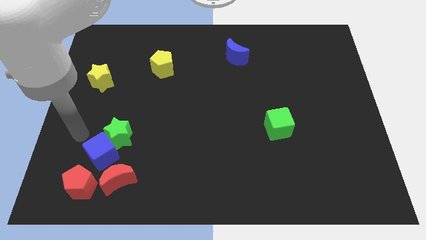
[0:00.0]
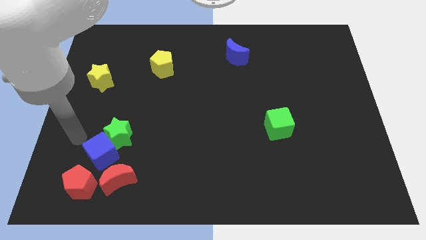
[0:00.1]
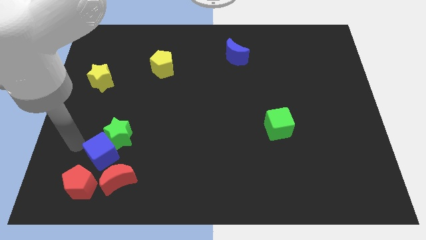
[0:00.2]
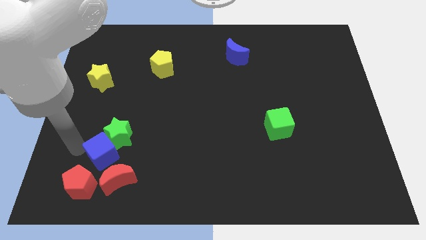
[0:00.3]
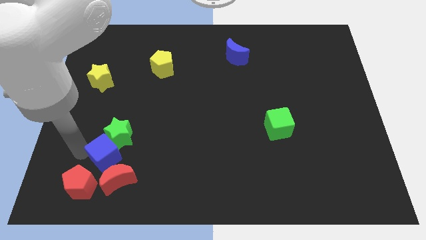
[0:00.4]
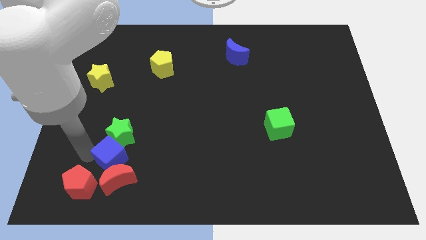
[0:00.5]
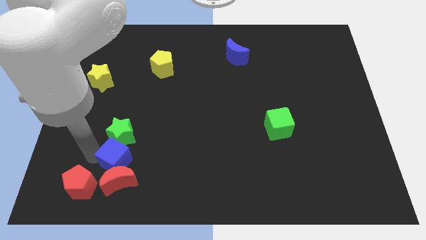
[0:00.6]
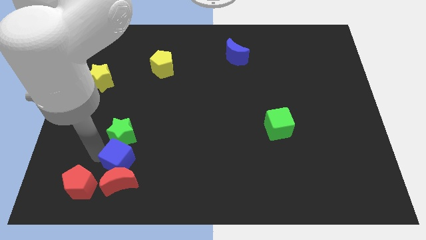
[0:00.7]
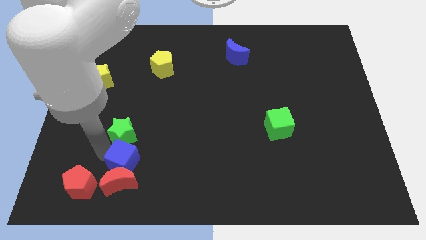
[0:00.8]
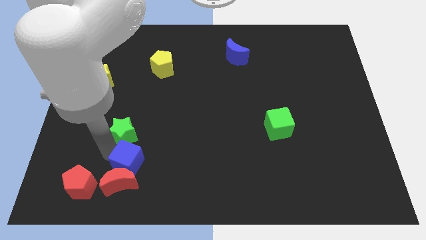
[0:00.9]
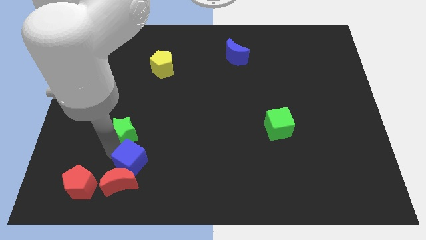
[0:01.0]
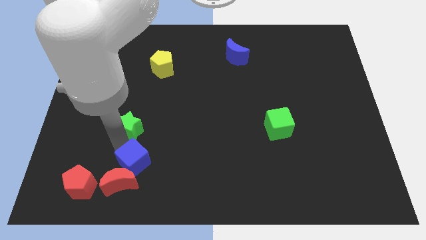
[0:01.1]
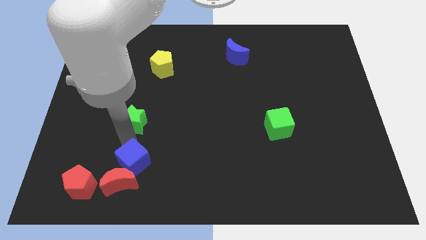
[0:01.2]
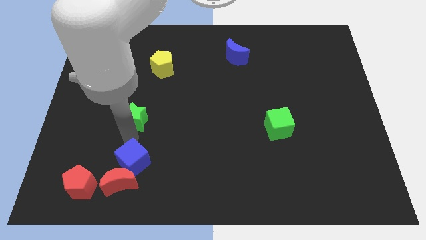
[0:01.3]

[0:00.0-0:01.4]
push the blue cube above the red crescent

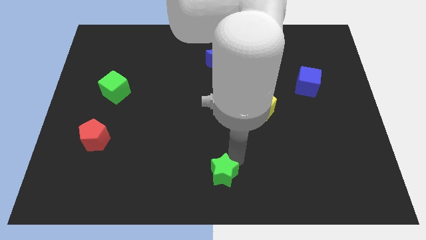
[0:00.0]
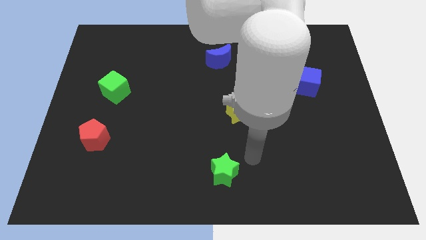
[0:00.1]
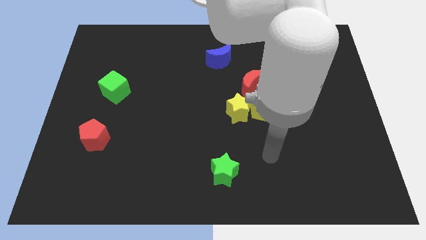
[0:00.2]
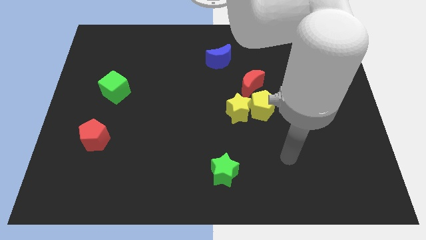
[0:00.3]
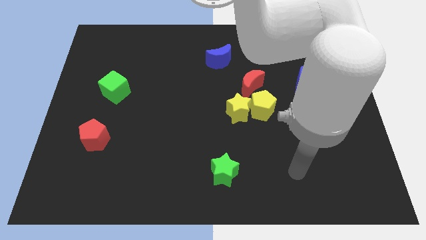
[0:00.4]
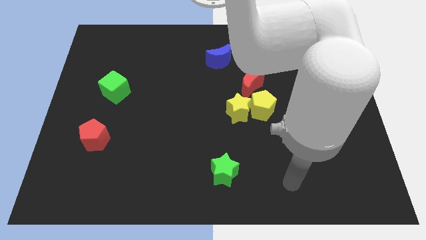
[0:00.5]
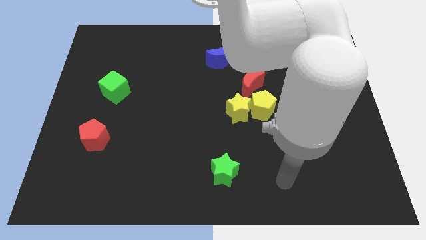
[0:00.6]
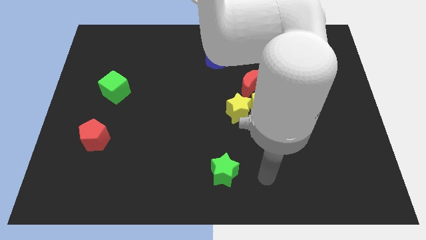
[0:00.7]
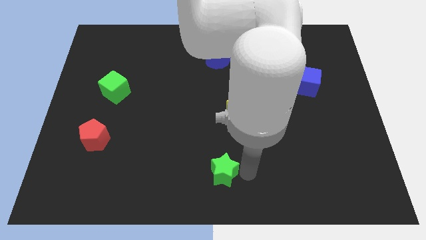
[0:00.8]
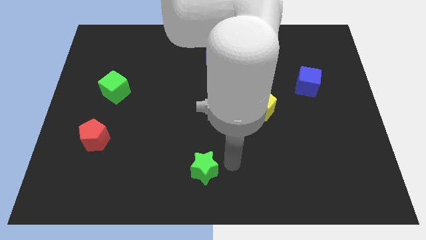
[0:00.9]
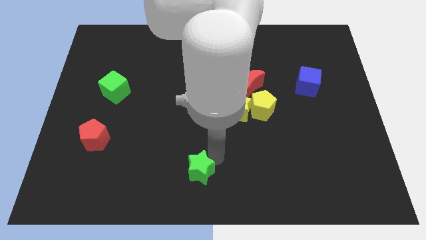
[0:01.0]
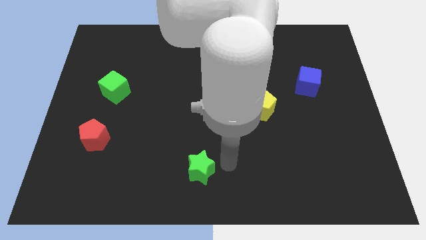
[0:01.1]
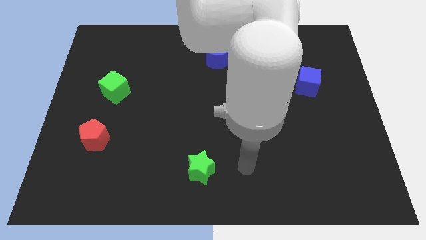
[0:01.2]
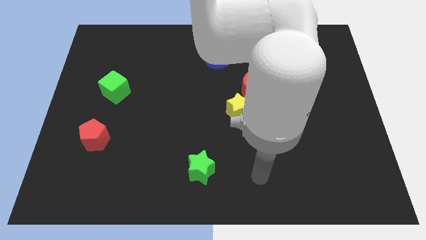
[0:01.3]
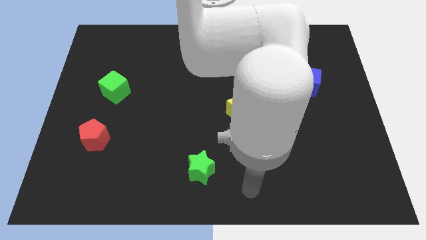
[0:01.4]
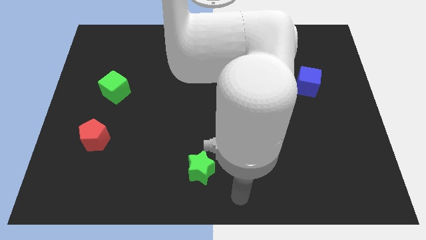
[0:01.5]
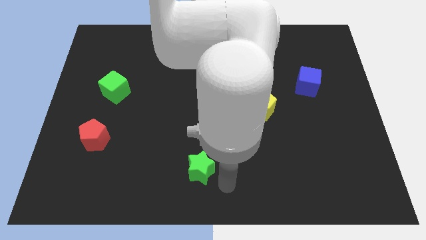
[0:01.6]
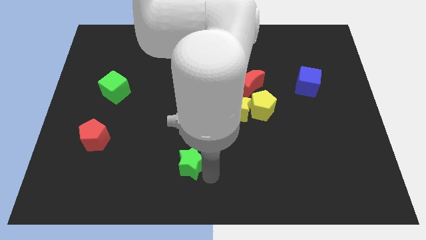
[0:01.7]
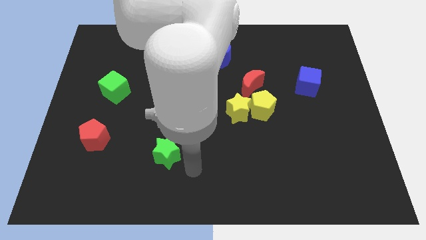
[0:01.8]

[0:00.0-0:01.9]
drag the green star diagonally to the bottom left of the yellow star

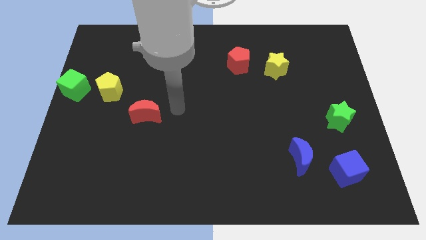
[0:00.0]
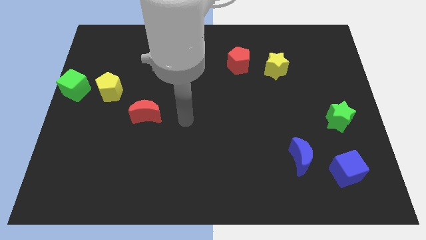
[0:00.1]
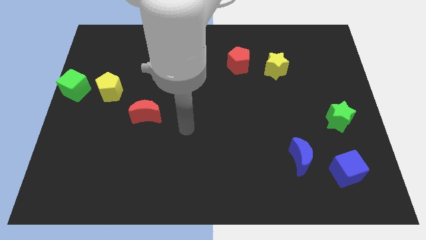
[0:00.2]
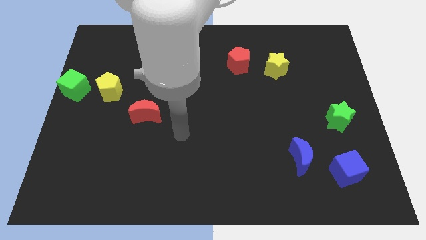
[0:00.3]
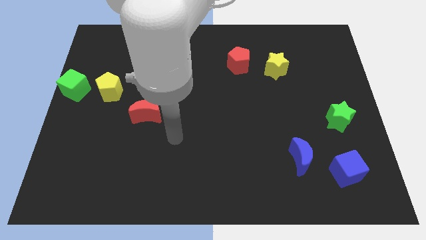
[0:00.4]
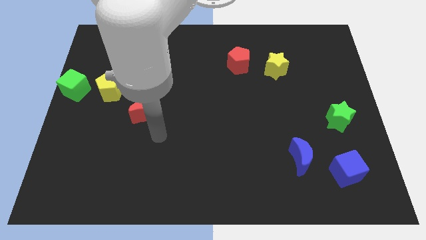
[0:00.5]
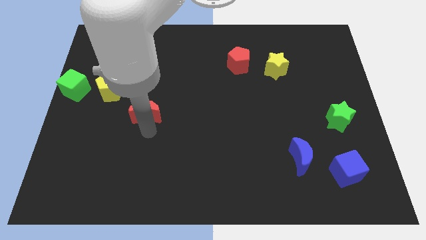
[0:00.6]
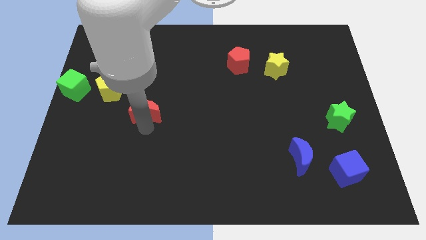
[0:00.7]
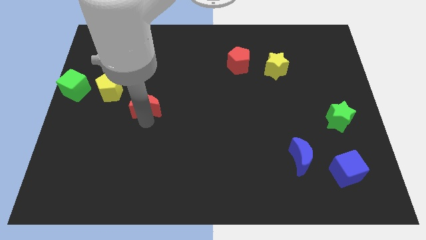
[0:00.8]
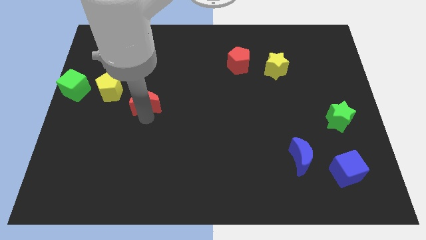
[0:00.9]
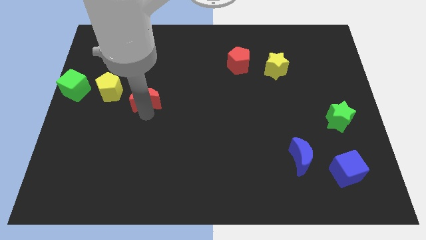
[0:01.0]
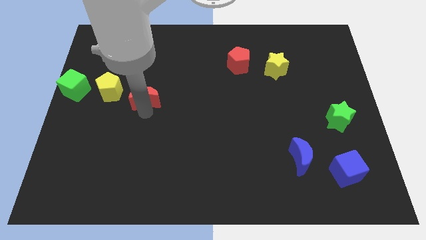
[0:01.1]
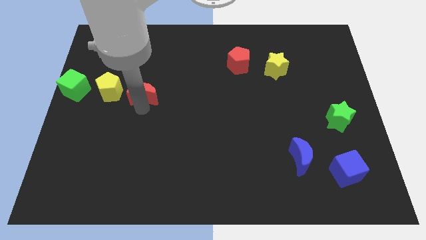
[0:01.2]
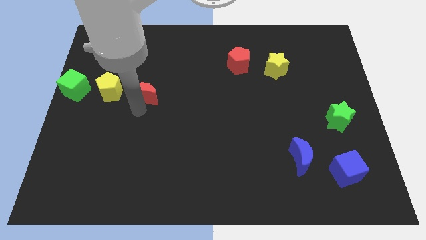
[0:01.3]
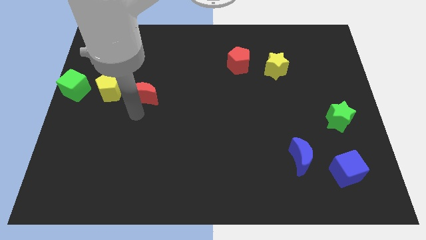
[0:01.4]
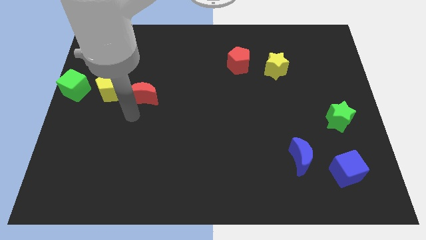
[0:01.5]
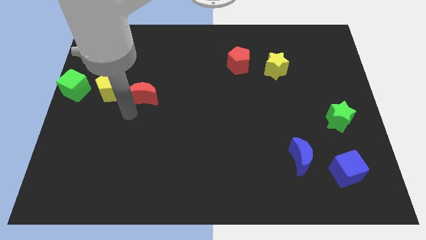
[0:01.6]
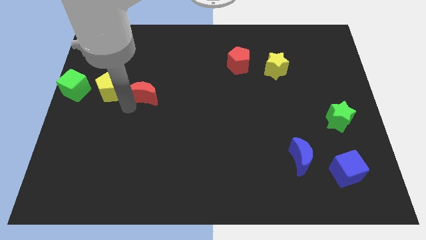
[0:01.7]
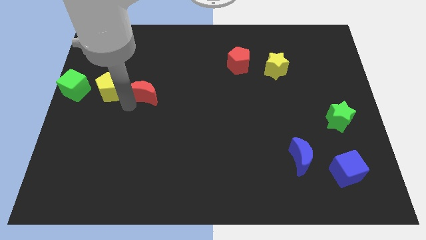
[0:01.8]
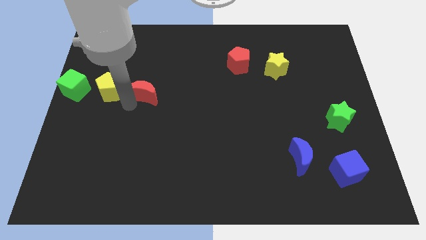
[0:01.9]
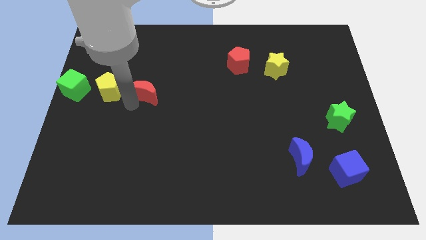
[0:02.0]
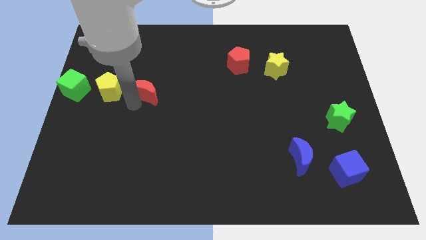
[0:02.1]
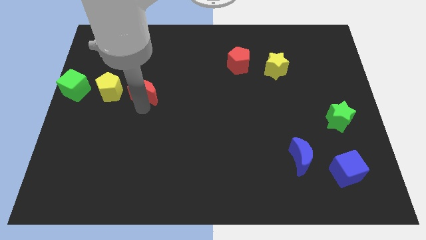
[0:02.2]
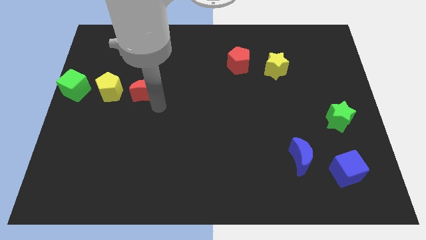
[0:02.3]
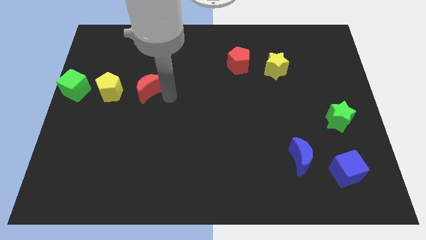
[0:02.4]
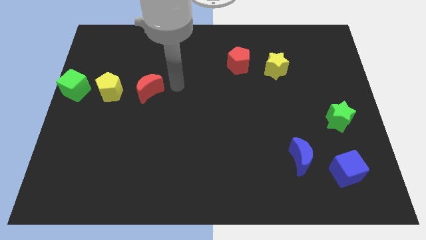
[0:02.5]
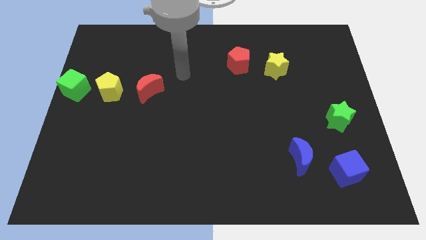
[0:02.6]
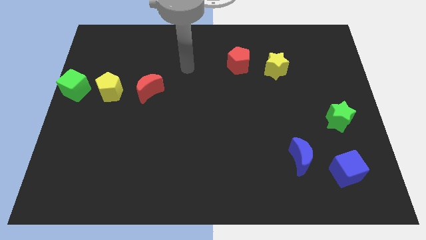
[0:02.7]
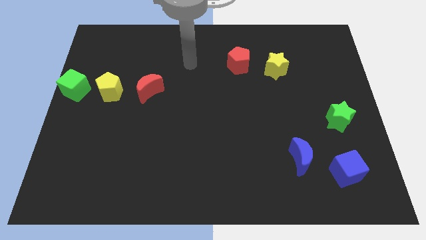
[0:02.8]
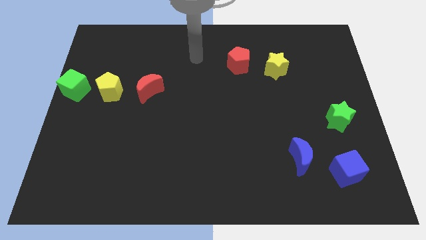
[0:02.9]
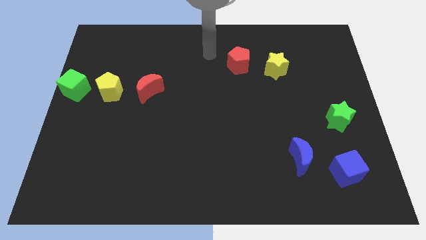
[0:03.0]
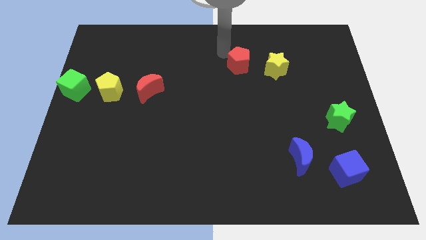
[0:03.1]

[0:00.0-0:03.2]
place red crescent to the right of yellow pentagon

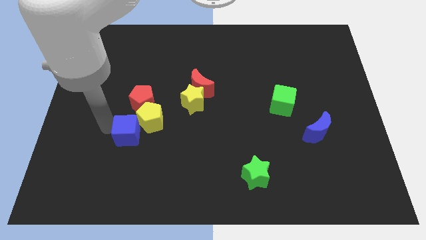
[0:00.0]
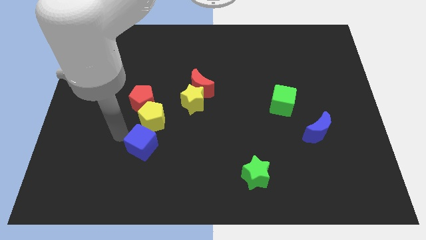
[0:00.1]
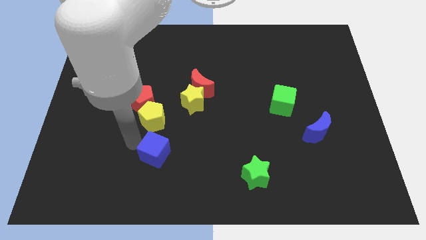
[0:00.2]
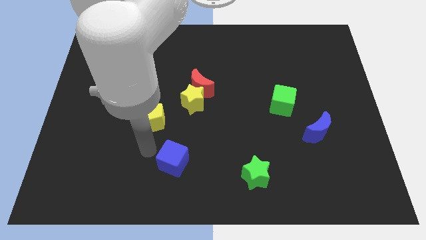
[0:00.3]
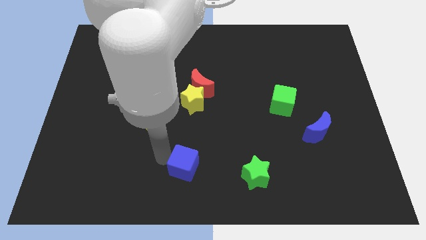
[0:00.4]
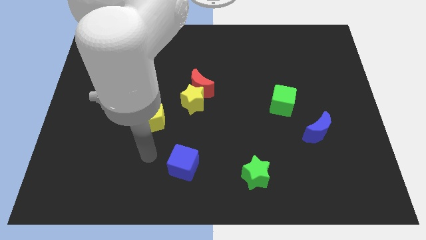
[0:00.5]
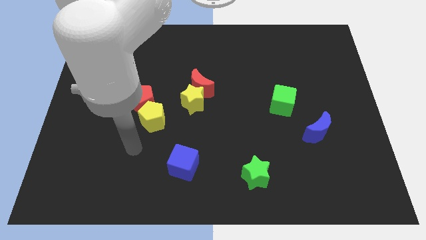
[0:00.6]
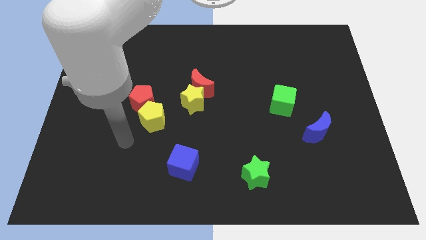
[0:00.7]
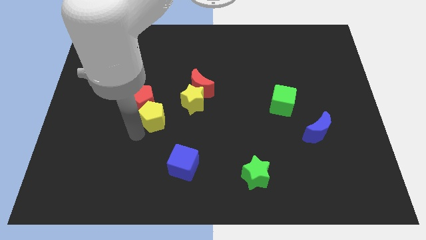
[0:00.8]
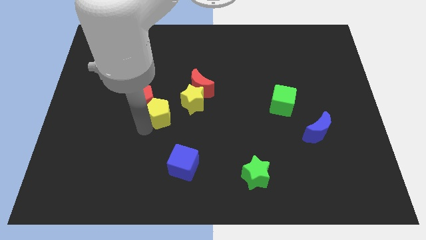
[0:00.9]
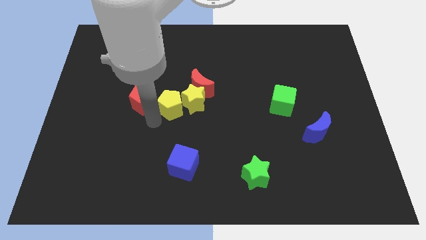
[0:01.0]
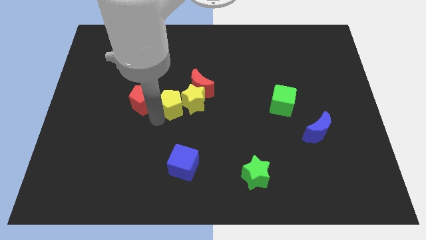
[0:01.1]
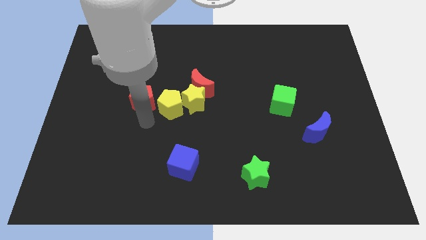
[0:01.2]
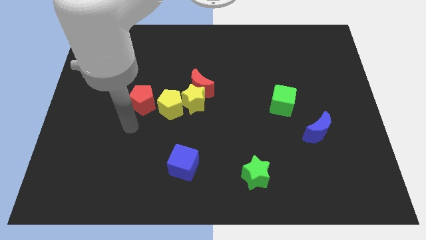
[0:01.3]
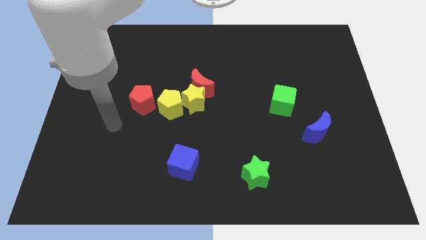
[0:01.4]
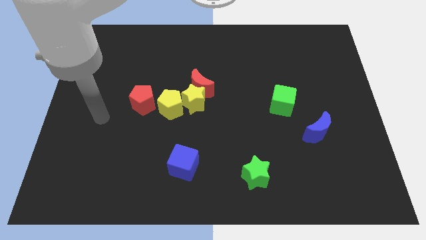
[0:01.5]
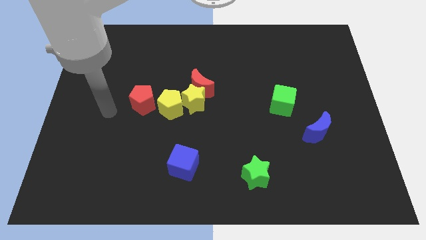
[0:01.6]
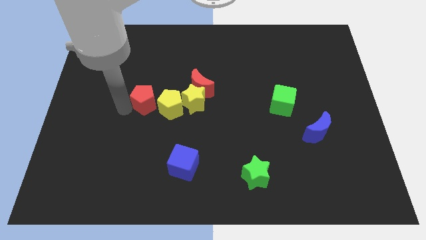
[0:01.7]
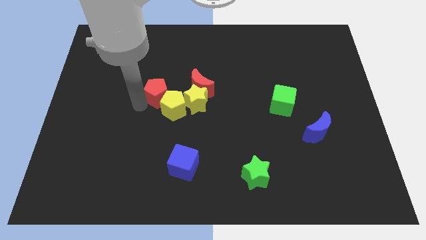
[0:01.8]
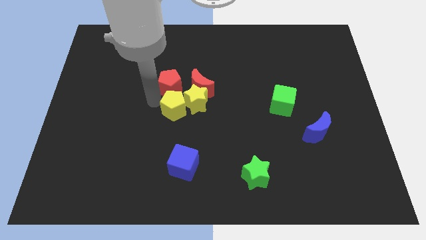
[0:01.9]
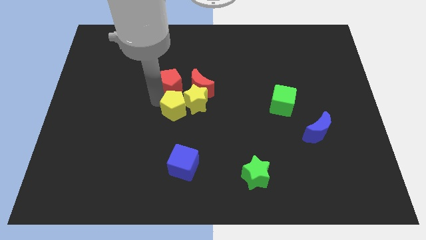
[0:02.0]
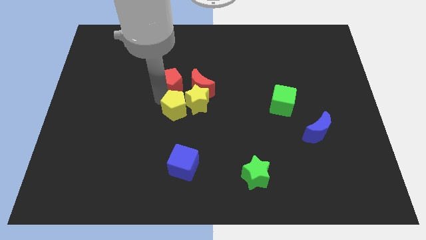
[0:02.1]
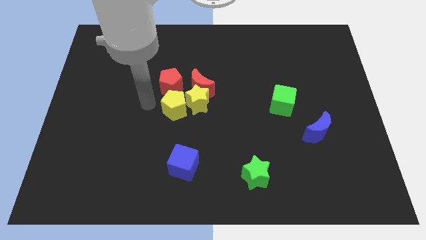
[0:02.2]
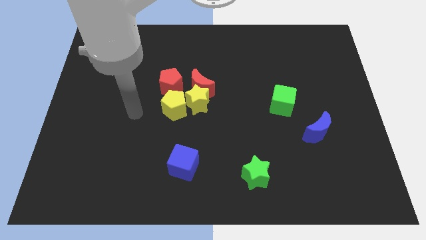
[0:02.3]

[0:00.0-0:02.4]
move the red pentagon left to the red moon

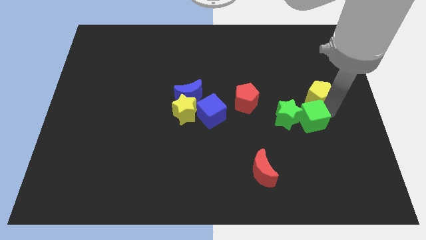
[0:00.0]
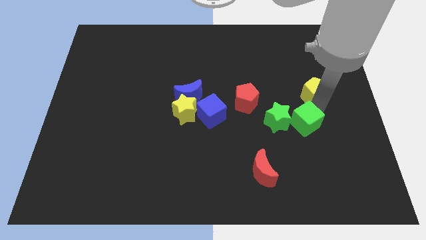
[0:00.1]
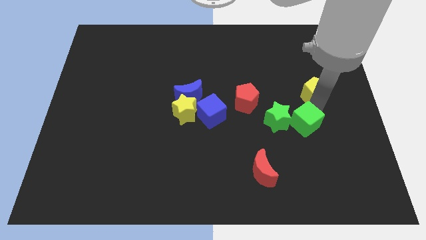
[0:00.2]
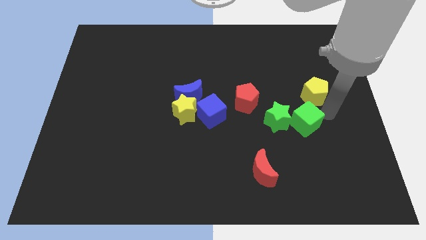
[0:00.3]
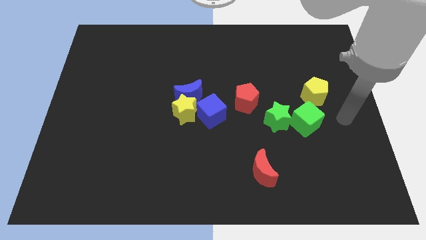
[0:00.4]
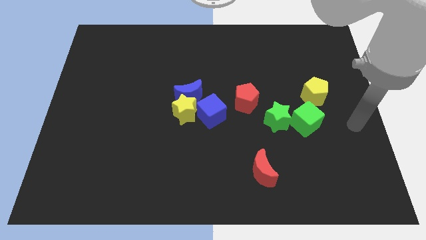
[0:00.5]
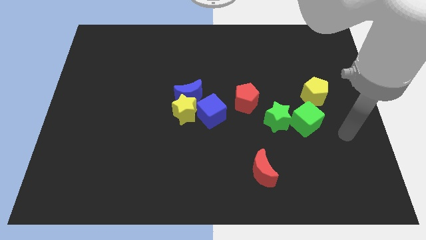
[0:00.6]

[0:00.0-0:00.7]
push green star with the green cube
